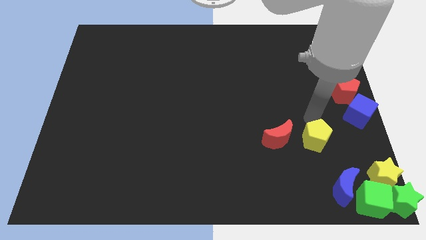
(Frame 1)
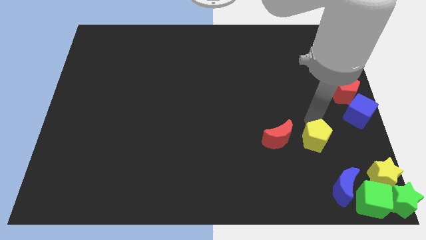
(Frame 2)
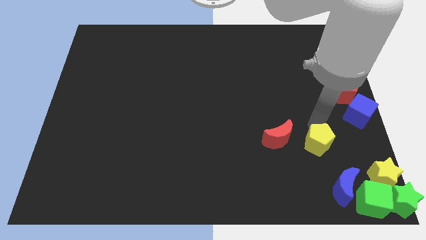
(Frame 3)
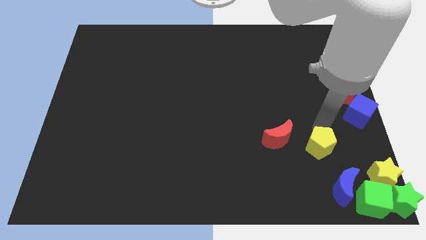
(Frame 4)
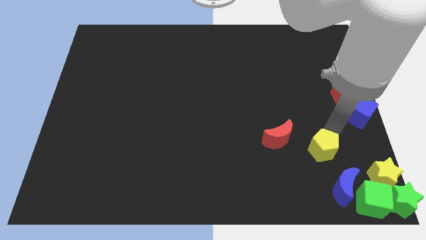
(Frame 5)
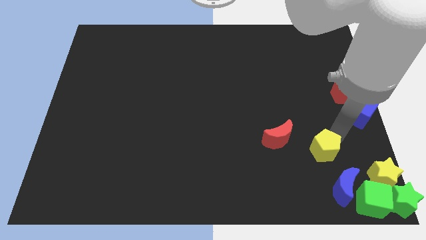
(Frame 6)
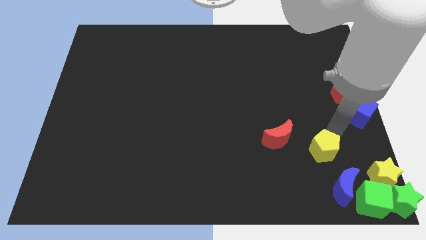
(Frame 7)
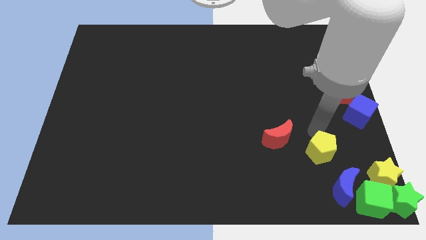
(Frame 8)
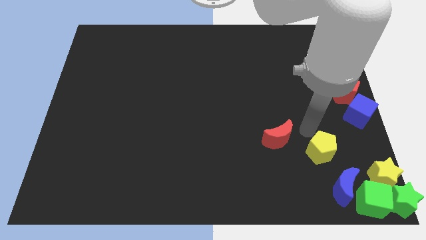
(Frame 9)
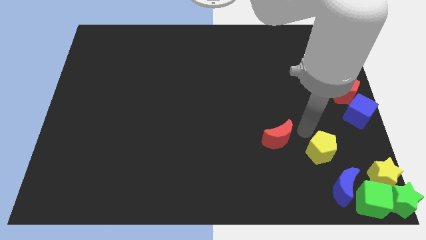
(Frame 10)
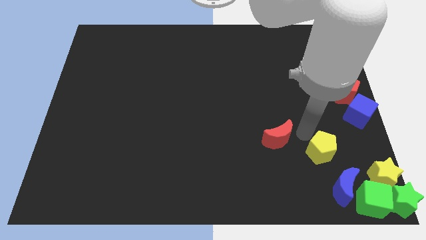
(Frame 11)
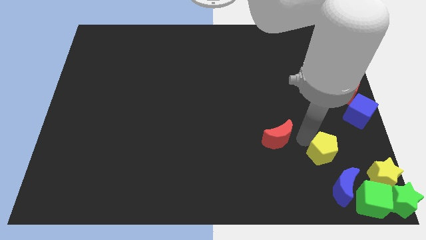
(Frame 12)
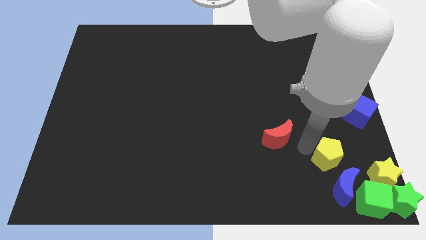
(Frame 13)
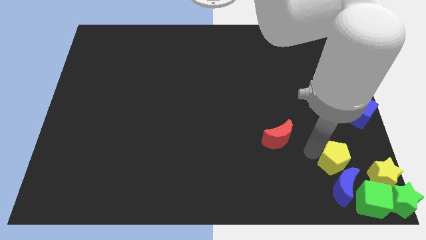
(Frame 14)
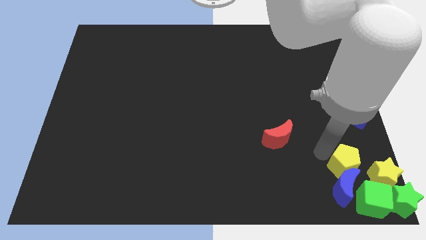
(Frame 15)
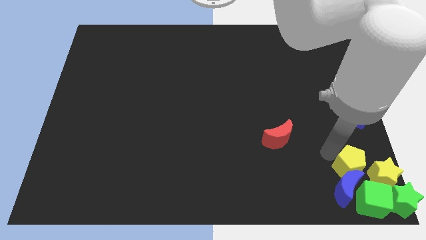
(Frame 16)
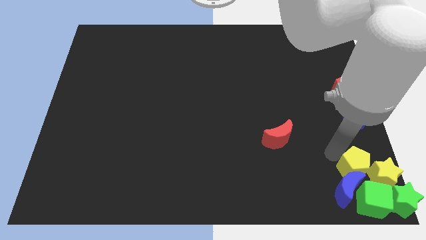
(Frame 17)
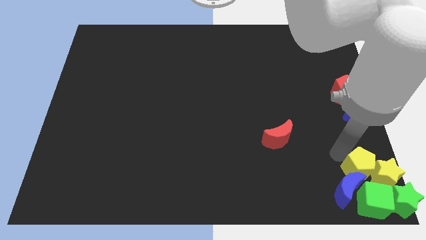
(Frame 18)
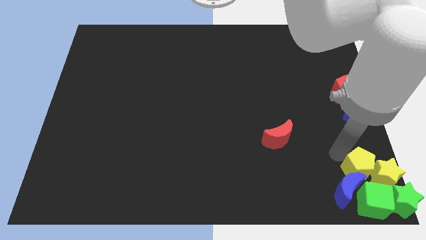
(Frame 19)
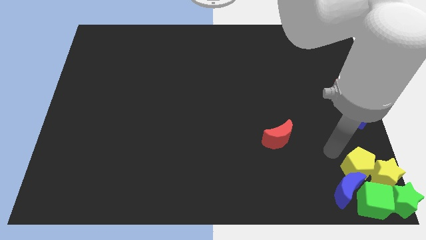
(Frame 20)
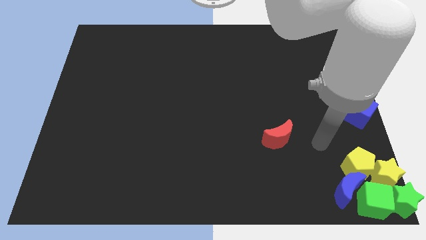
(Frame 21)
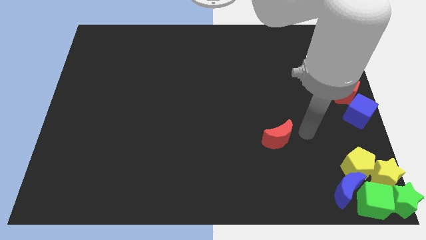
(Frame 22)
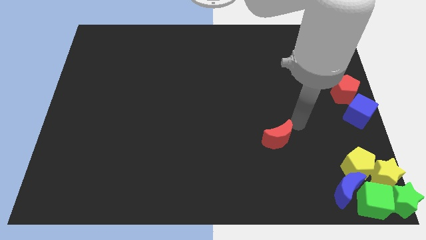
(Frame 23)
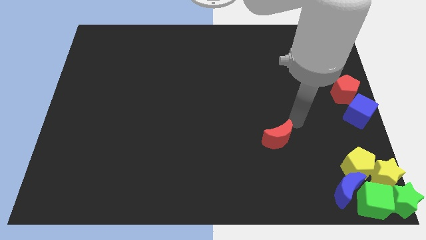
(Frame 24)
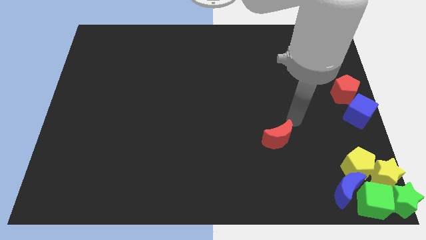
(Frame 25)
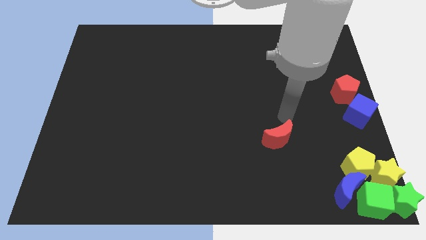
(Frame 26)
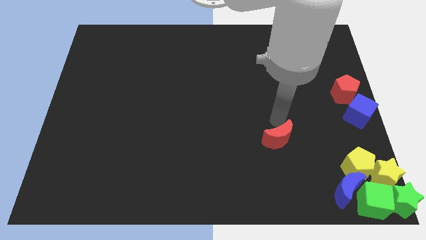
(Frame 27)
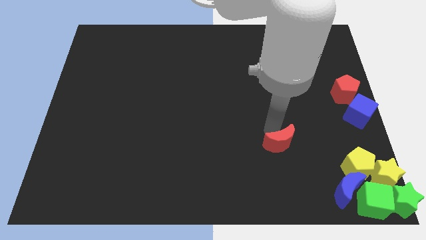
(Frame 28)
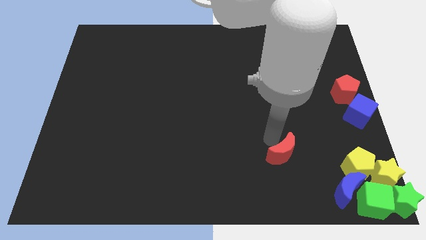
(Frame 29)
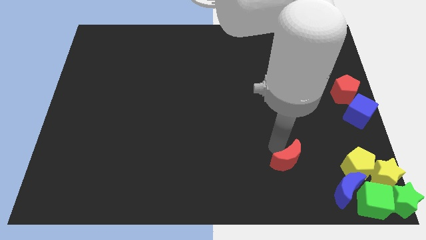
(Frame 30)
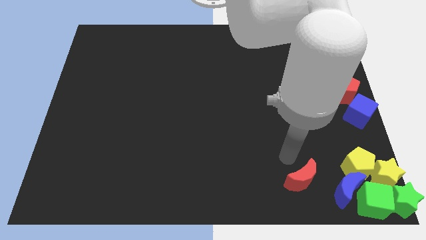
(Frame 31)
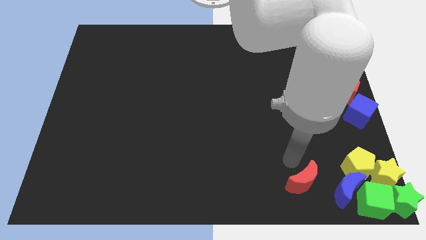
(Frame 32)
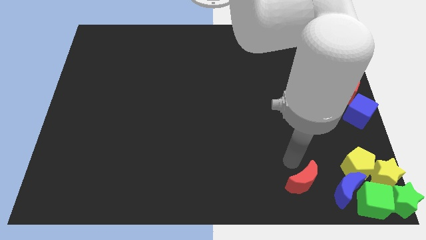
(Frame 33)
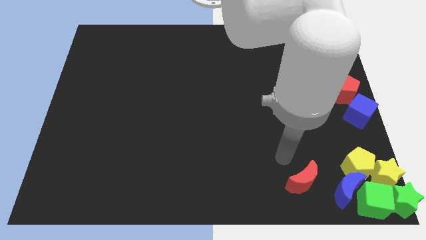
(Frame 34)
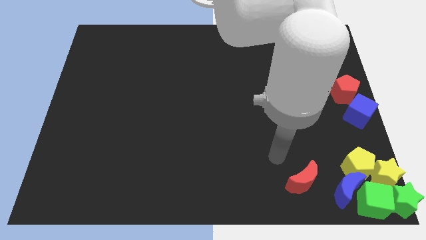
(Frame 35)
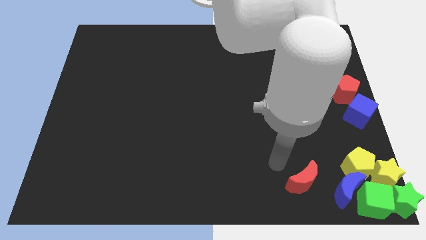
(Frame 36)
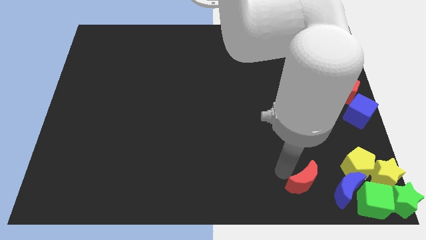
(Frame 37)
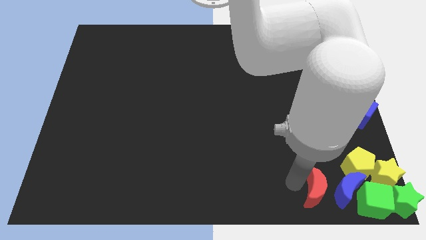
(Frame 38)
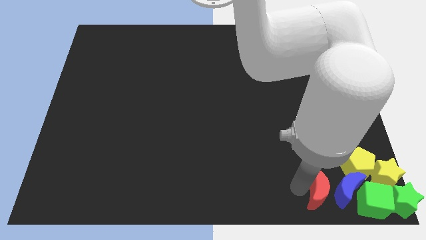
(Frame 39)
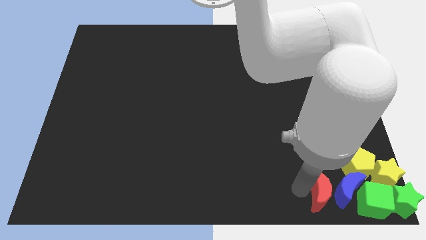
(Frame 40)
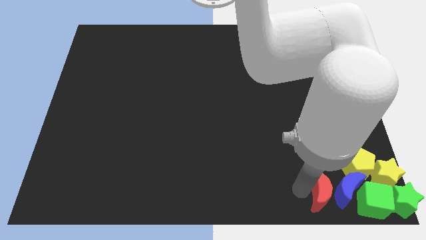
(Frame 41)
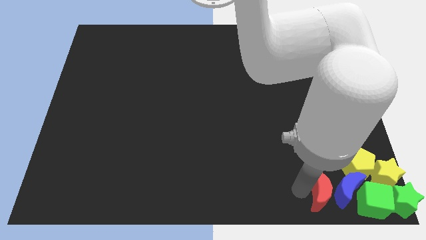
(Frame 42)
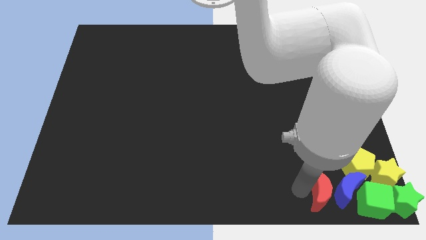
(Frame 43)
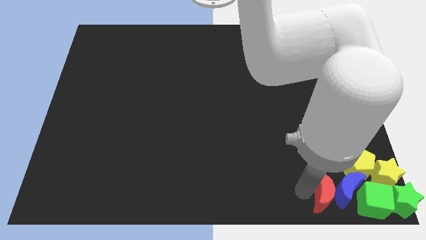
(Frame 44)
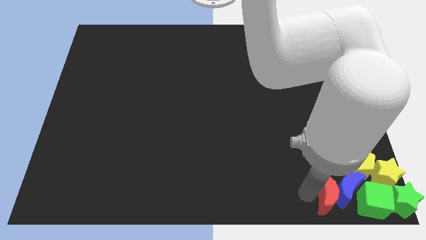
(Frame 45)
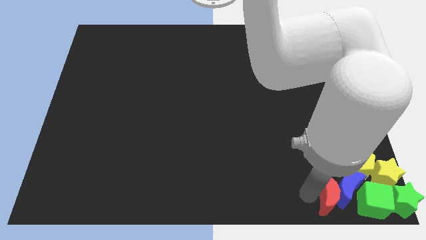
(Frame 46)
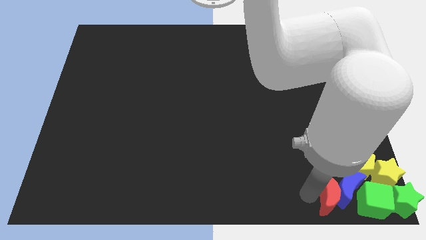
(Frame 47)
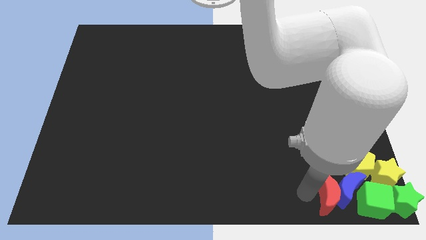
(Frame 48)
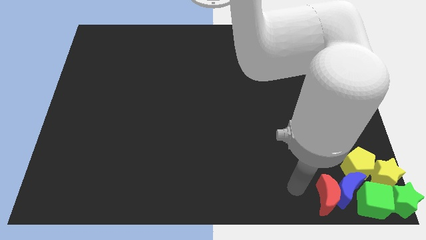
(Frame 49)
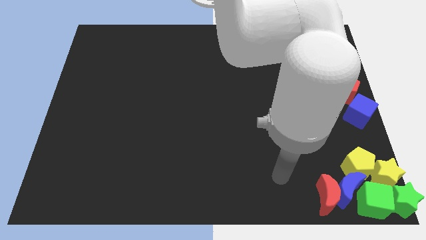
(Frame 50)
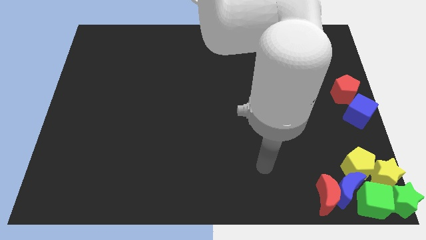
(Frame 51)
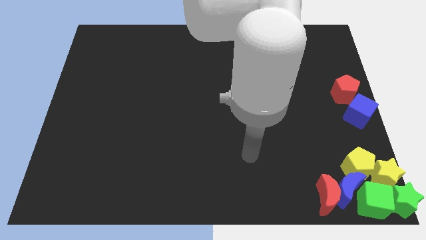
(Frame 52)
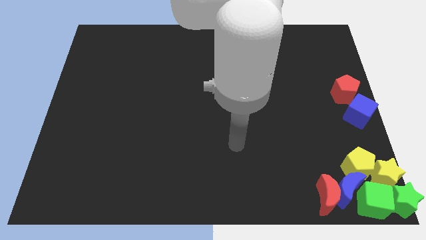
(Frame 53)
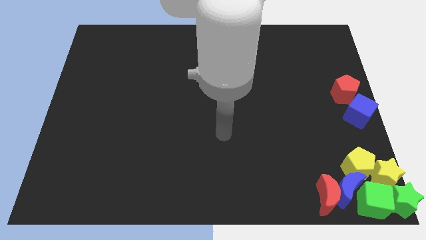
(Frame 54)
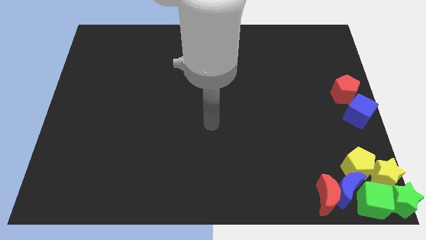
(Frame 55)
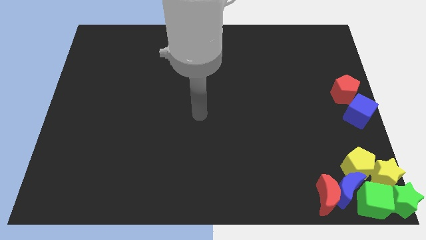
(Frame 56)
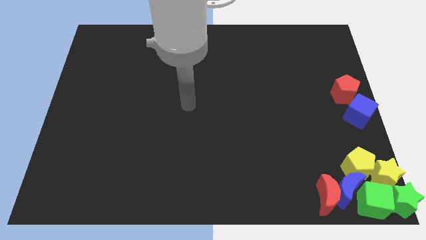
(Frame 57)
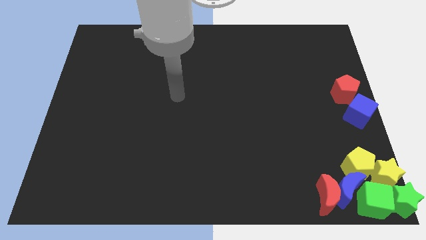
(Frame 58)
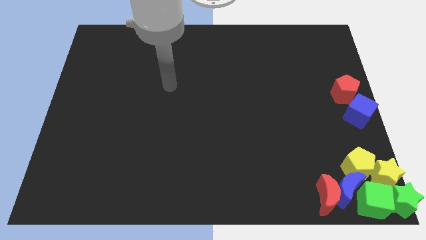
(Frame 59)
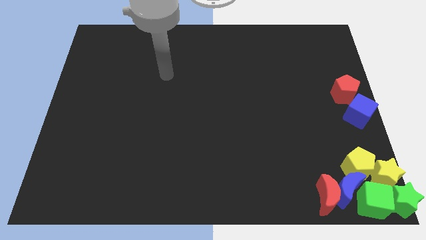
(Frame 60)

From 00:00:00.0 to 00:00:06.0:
add the yellow pentagon and red crescent to the group of blocks at the bottom right corner of the board

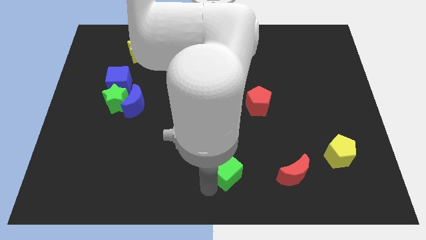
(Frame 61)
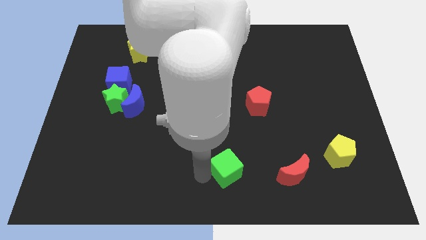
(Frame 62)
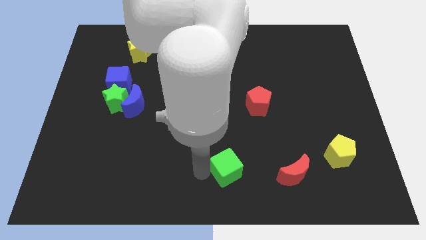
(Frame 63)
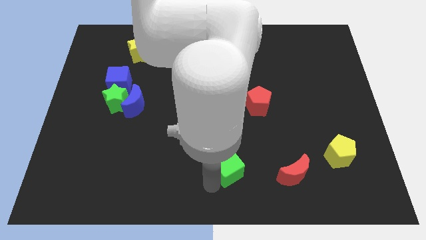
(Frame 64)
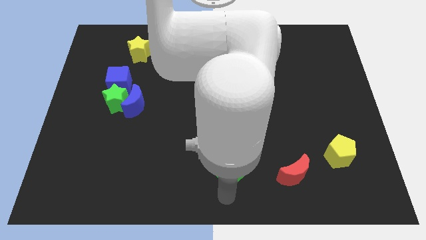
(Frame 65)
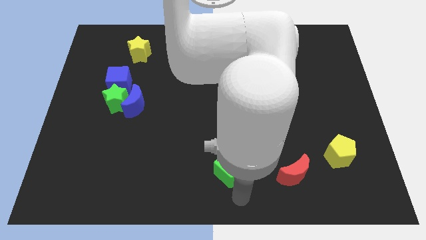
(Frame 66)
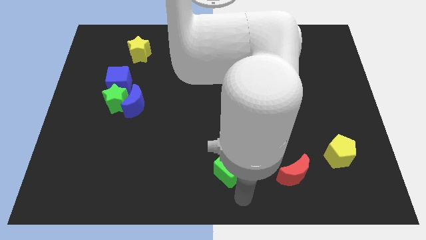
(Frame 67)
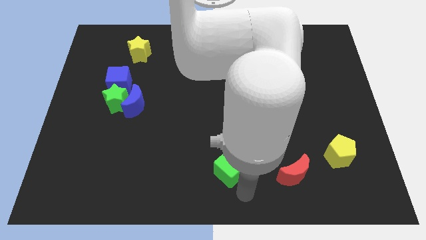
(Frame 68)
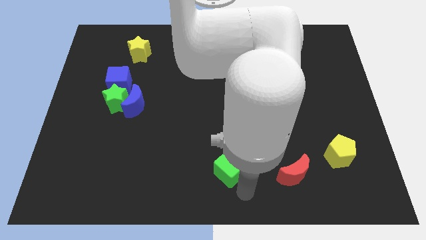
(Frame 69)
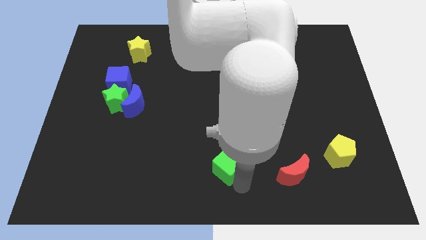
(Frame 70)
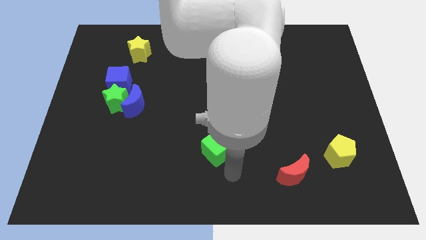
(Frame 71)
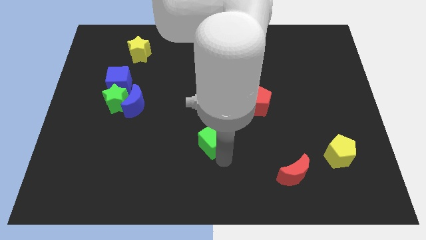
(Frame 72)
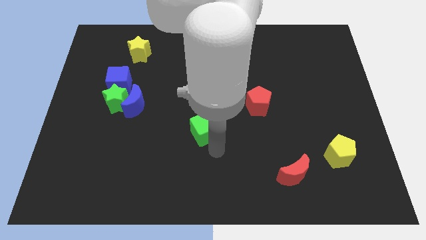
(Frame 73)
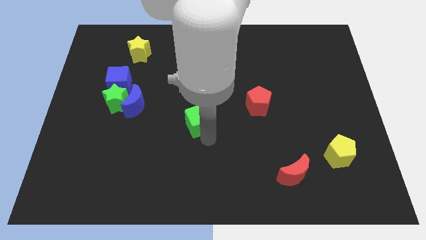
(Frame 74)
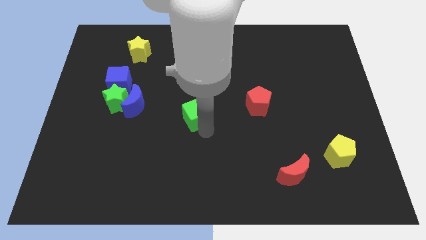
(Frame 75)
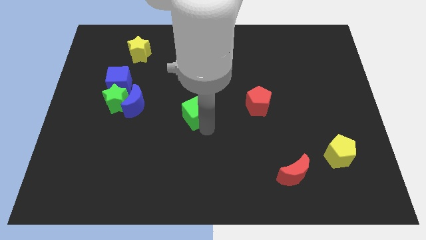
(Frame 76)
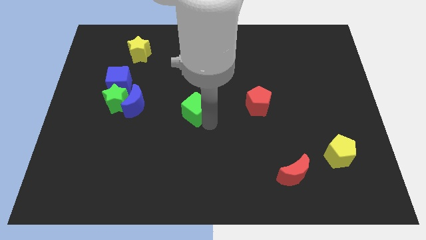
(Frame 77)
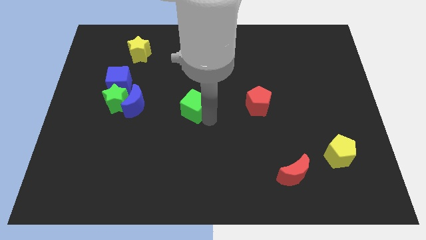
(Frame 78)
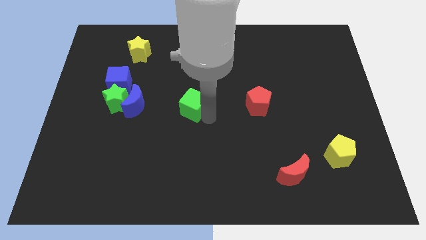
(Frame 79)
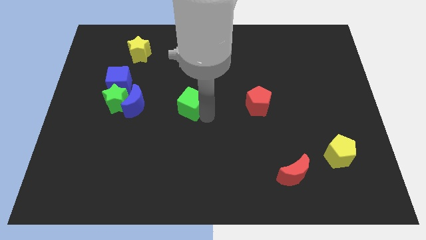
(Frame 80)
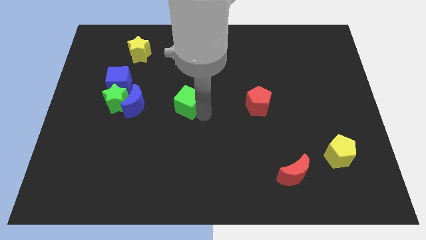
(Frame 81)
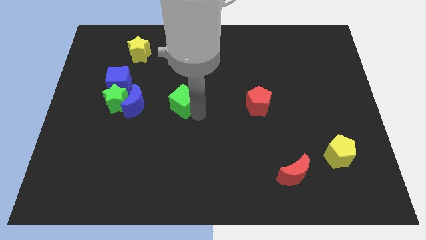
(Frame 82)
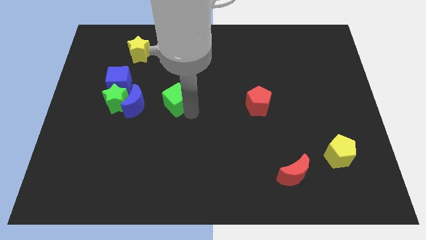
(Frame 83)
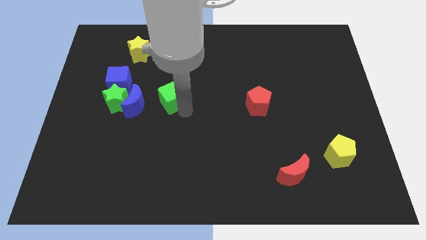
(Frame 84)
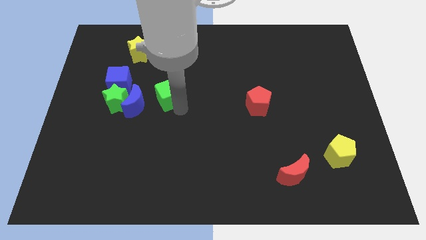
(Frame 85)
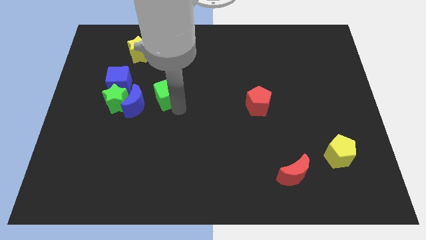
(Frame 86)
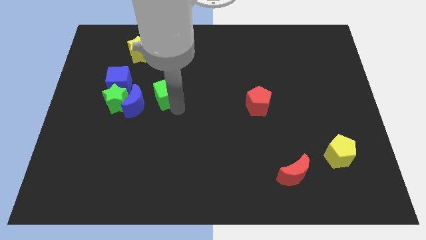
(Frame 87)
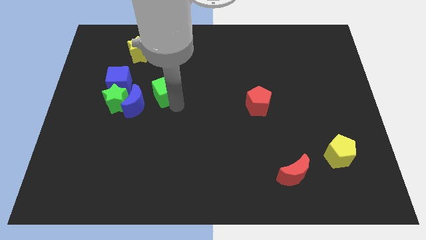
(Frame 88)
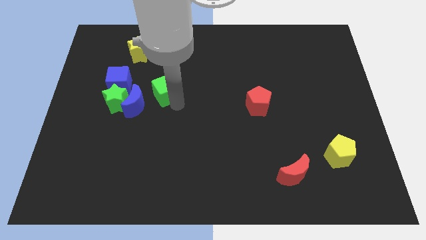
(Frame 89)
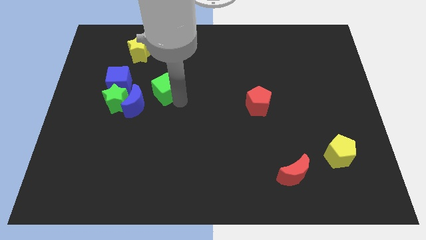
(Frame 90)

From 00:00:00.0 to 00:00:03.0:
move the green cube towards yellow star
